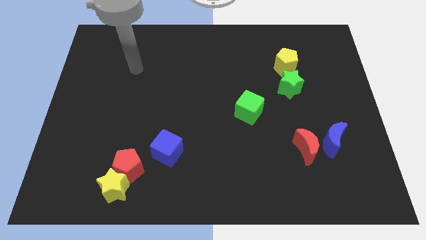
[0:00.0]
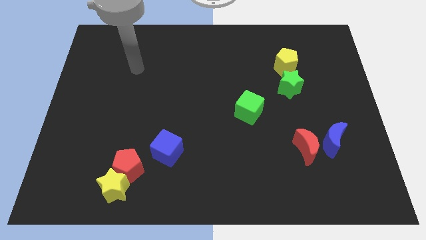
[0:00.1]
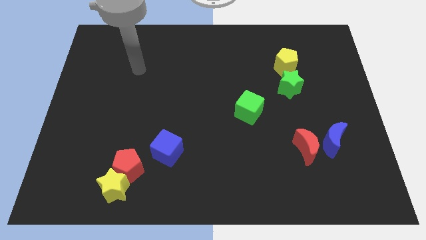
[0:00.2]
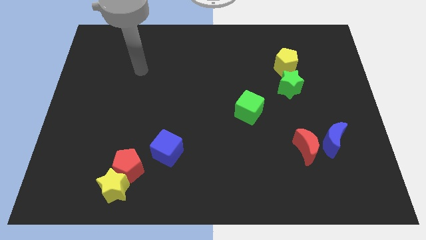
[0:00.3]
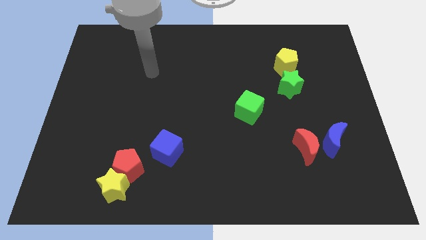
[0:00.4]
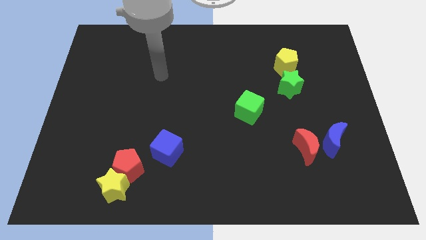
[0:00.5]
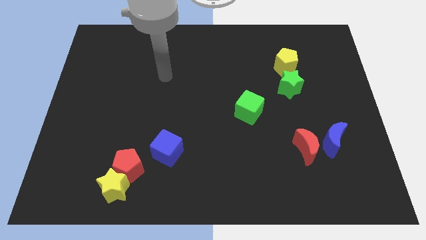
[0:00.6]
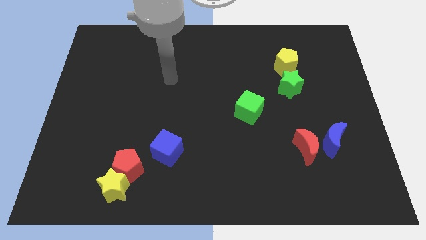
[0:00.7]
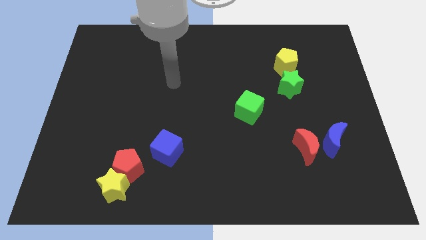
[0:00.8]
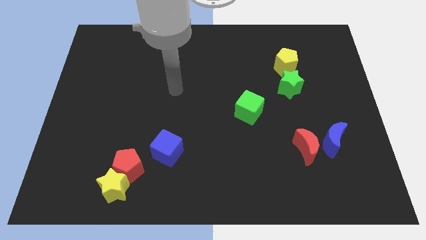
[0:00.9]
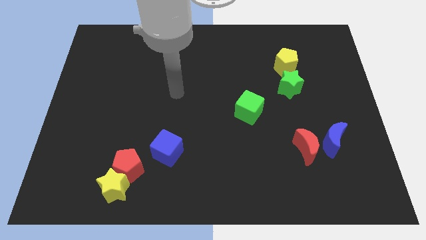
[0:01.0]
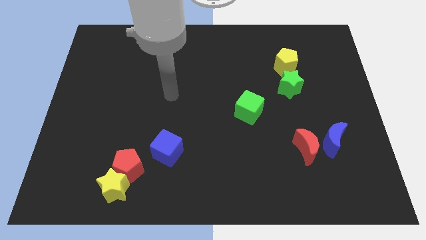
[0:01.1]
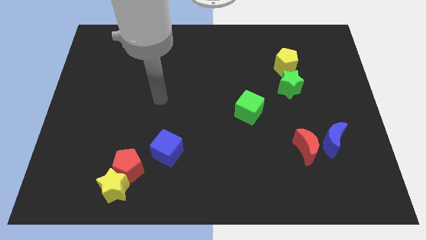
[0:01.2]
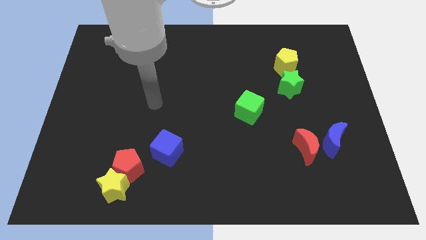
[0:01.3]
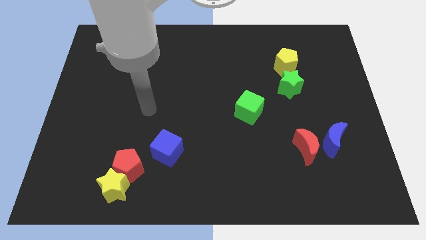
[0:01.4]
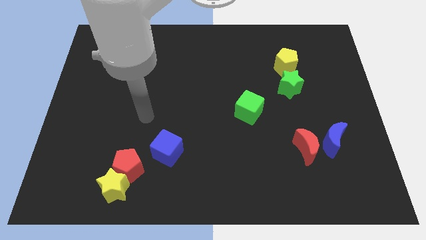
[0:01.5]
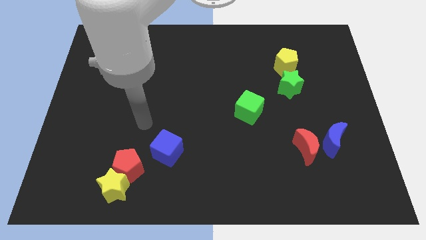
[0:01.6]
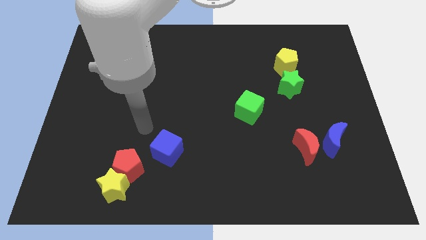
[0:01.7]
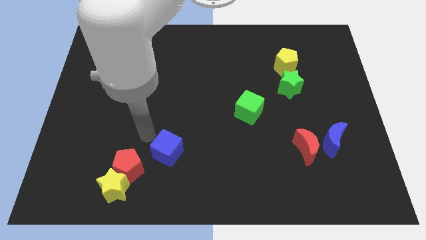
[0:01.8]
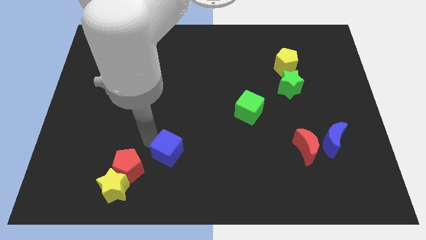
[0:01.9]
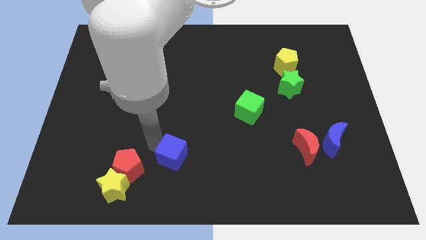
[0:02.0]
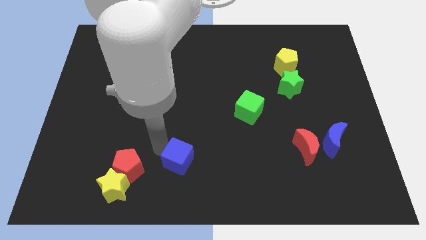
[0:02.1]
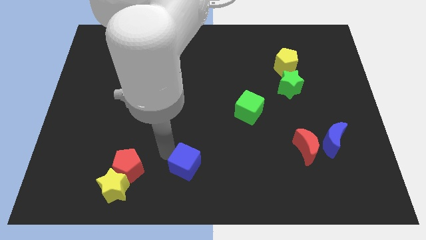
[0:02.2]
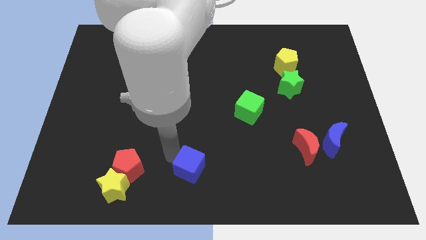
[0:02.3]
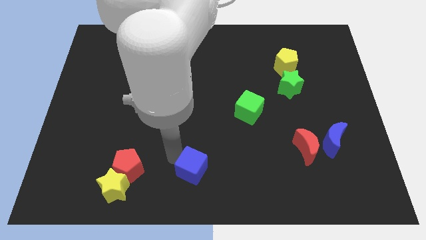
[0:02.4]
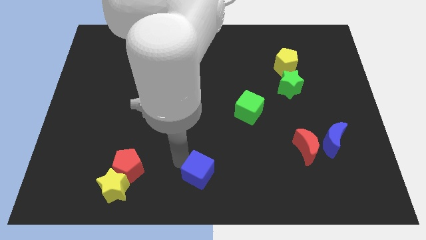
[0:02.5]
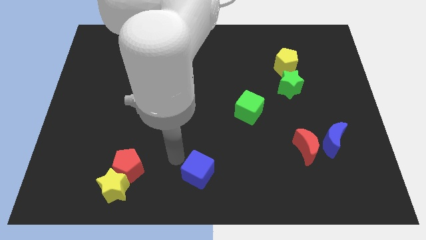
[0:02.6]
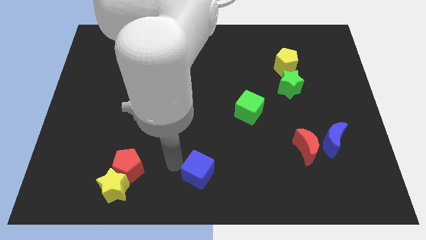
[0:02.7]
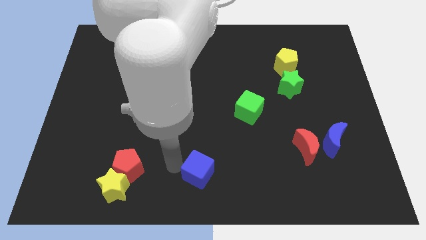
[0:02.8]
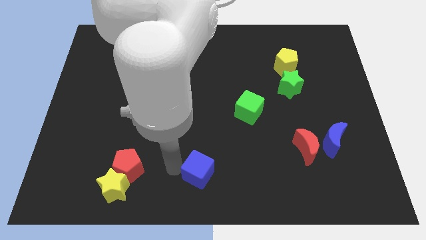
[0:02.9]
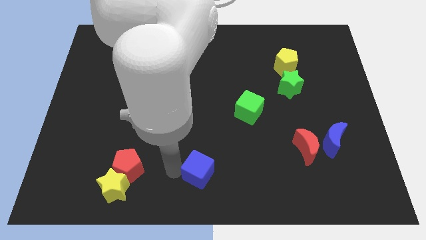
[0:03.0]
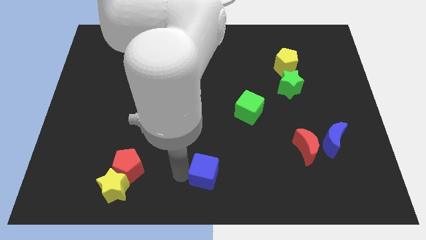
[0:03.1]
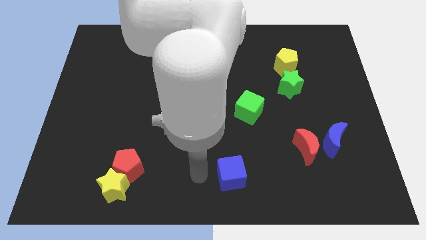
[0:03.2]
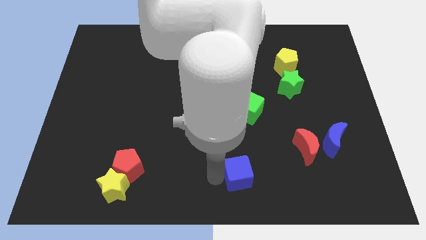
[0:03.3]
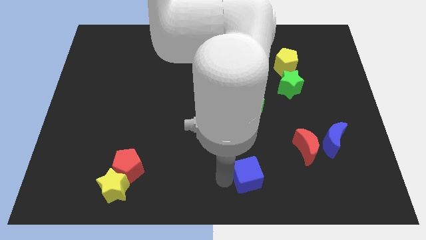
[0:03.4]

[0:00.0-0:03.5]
put the blue cube vertically below the green cube

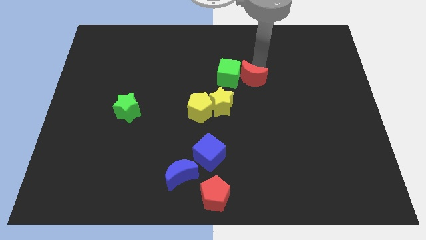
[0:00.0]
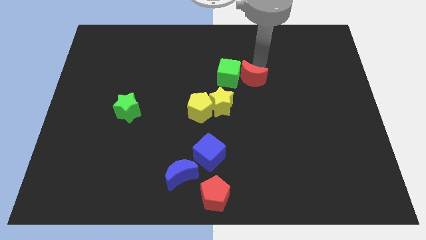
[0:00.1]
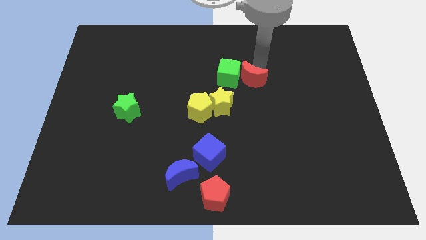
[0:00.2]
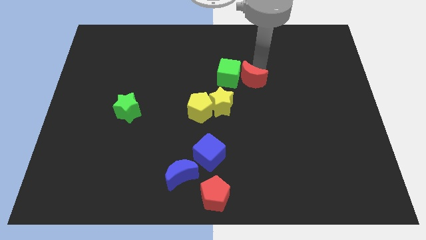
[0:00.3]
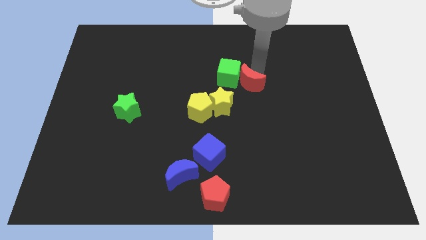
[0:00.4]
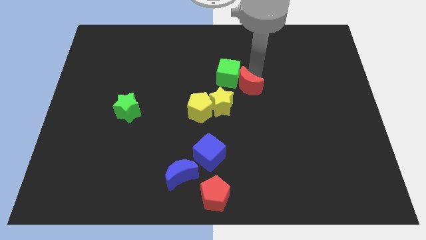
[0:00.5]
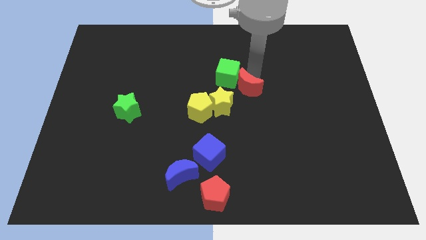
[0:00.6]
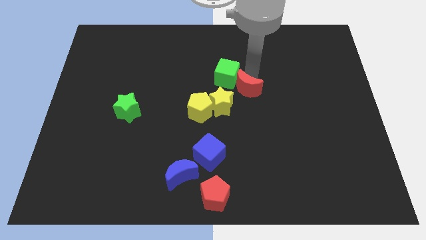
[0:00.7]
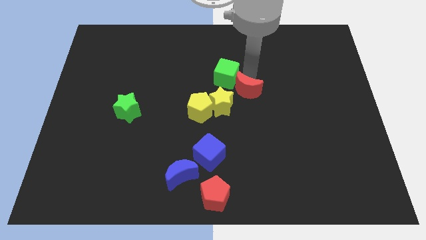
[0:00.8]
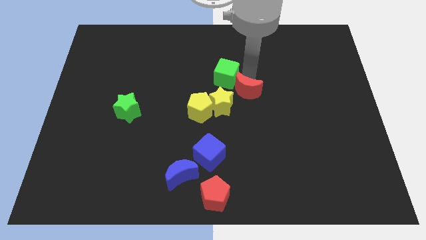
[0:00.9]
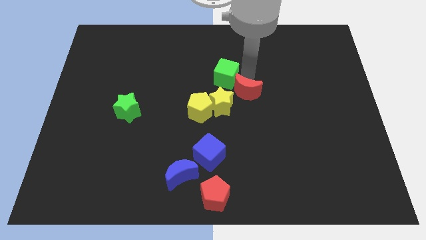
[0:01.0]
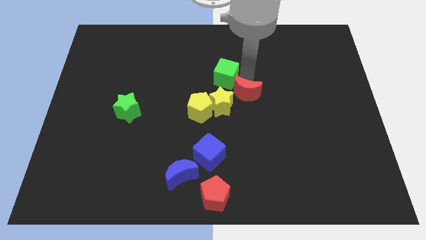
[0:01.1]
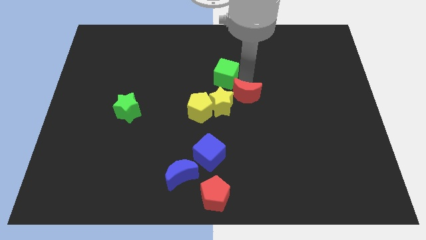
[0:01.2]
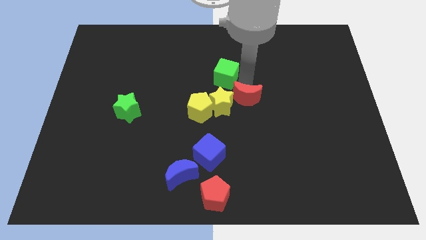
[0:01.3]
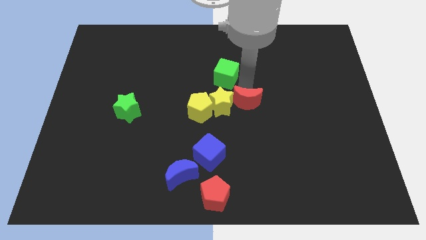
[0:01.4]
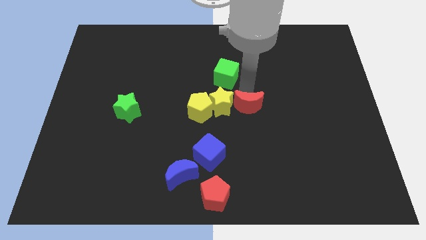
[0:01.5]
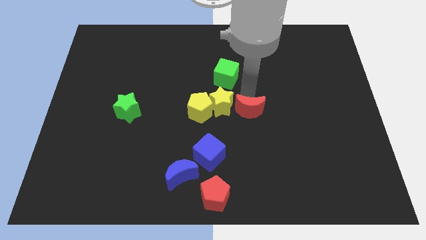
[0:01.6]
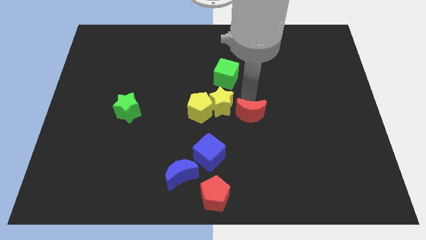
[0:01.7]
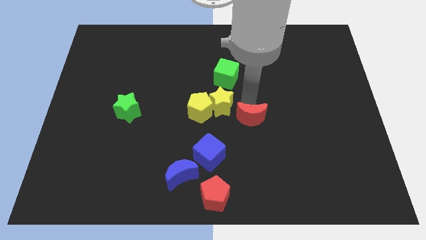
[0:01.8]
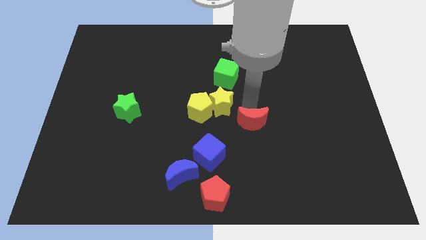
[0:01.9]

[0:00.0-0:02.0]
move the red moon at the bottom right of yellow star

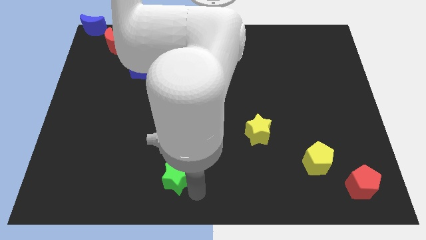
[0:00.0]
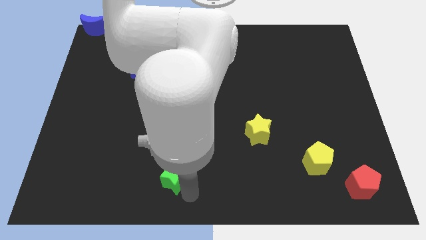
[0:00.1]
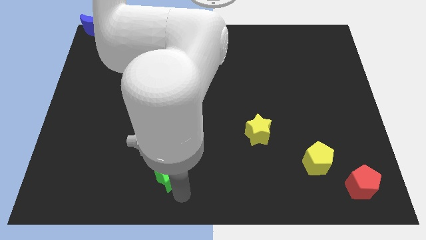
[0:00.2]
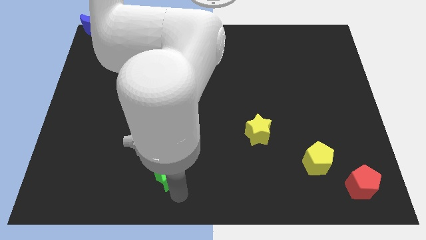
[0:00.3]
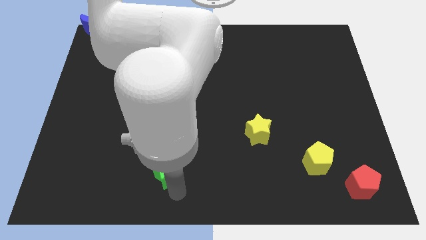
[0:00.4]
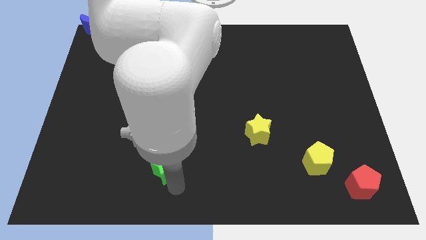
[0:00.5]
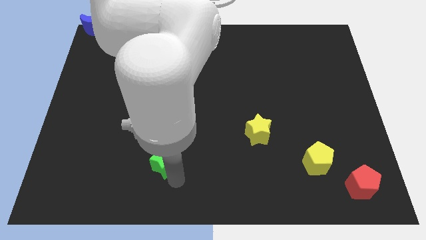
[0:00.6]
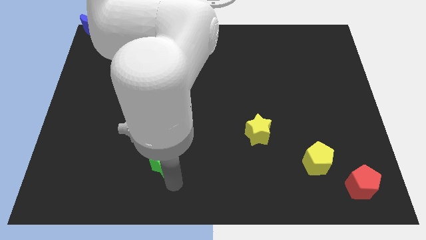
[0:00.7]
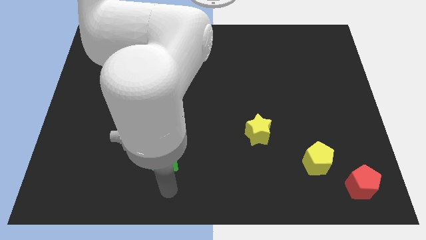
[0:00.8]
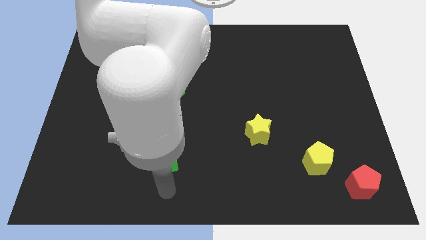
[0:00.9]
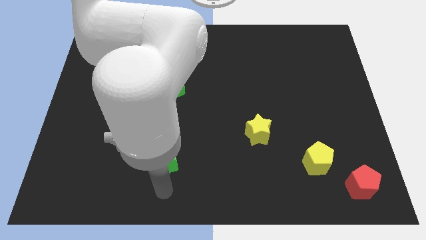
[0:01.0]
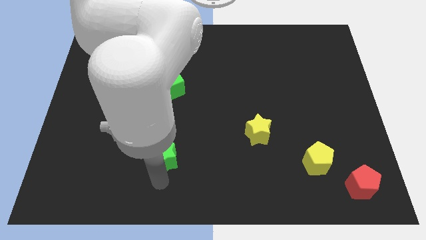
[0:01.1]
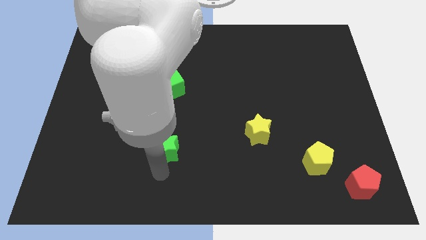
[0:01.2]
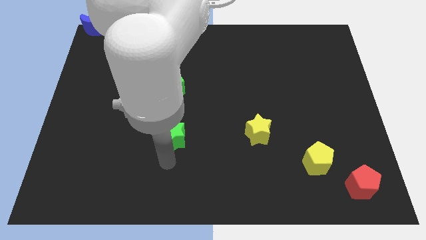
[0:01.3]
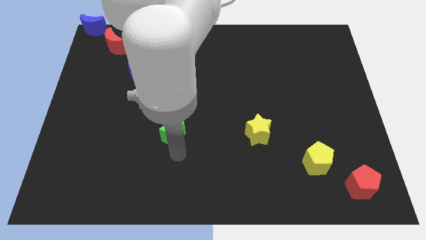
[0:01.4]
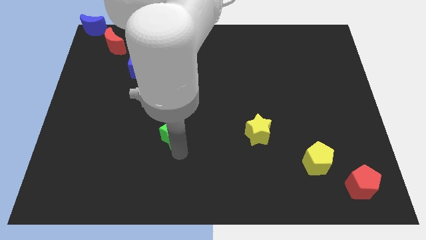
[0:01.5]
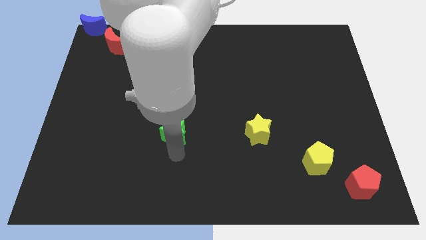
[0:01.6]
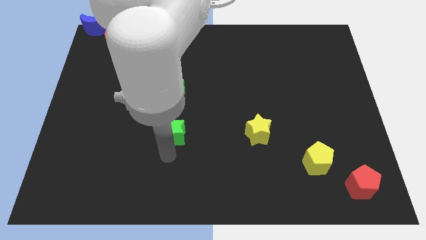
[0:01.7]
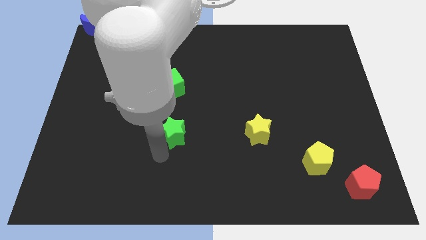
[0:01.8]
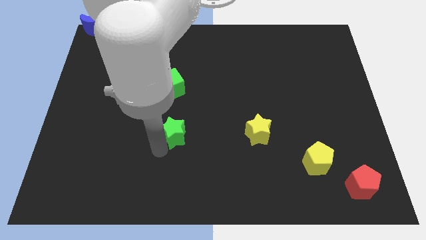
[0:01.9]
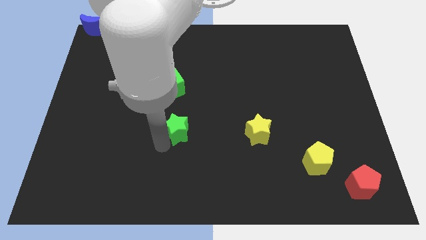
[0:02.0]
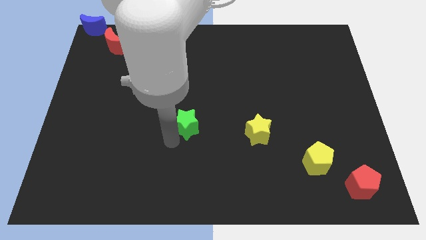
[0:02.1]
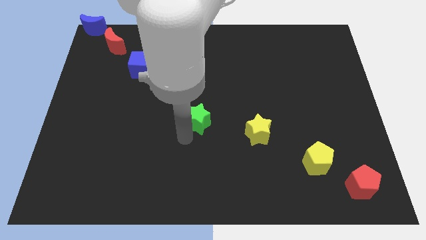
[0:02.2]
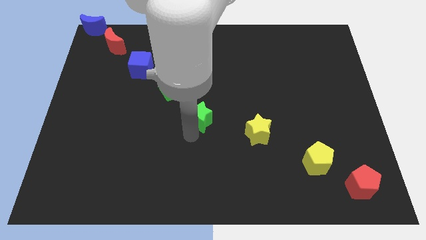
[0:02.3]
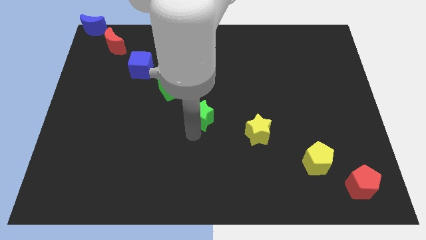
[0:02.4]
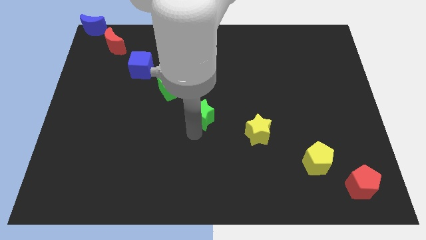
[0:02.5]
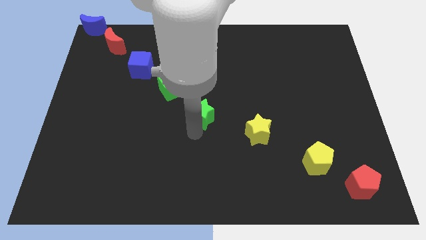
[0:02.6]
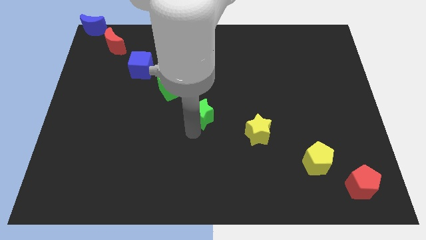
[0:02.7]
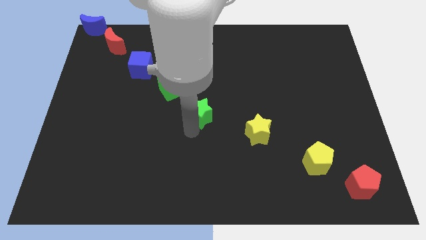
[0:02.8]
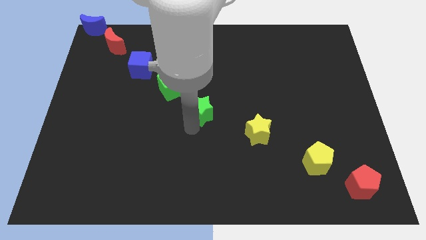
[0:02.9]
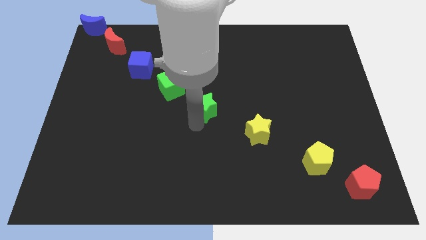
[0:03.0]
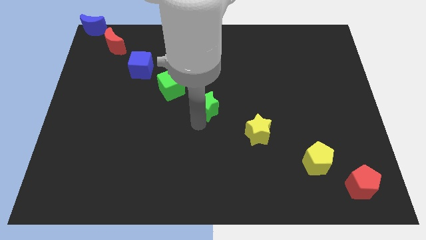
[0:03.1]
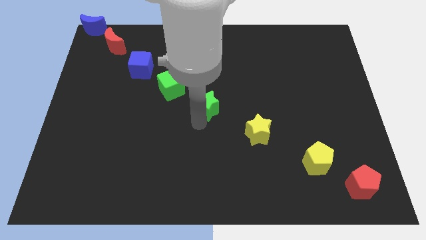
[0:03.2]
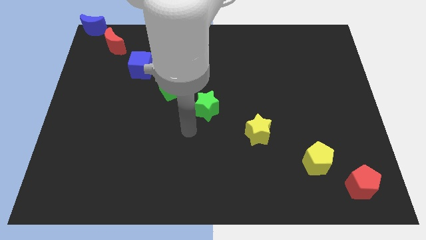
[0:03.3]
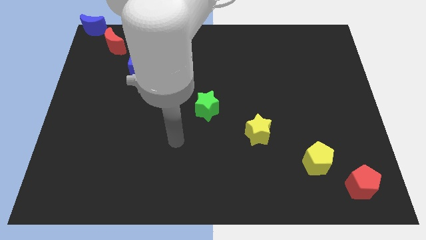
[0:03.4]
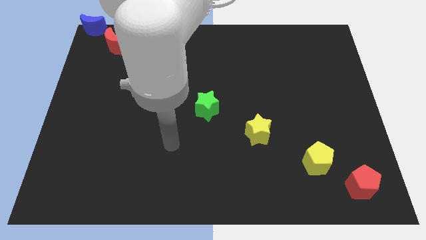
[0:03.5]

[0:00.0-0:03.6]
move the green star to the center of the board

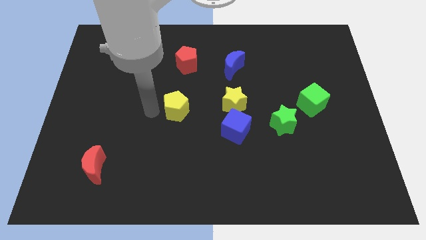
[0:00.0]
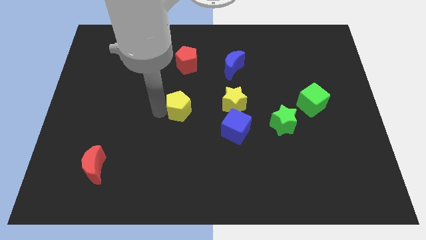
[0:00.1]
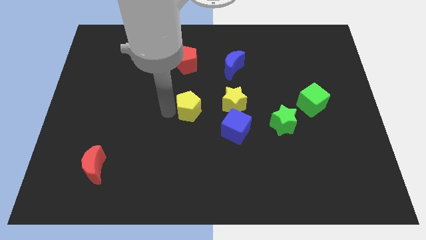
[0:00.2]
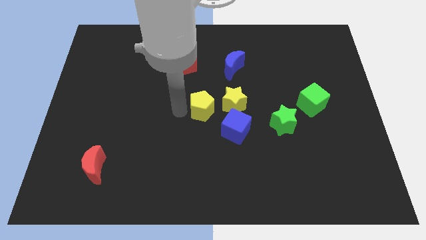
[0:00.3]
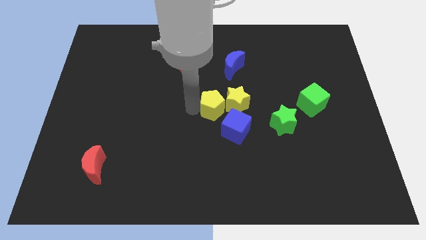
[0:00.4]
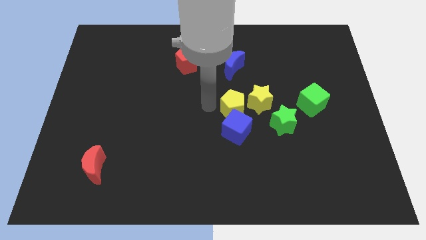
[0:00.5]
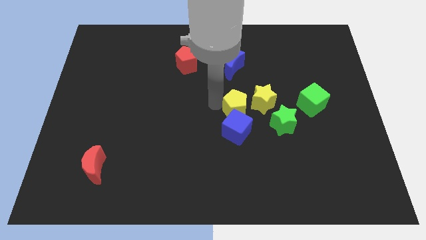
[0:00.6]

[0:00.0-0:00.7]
move the yellow pentagon to the left of yellow star
